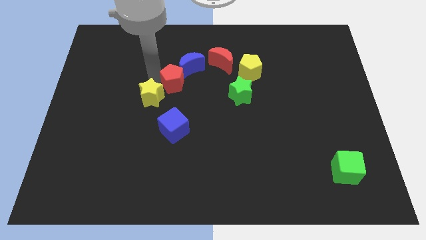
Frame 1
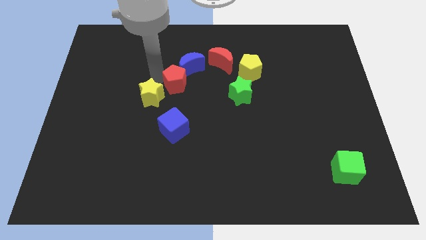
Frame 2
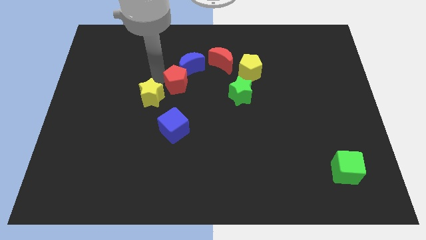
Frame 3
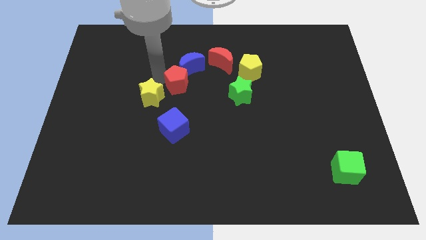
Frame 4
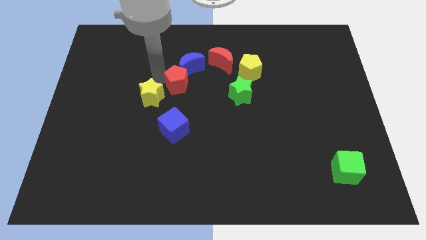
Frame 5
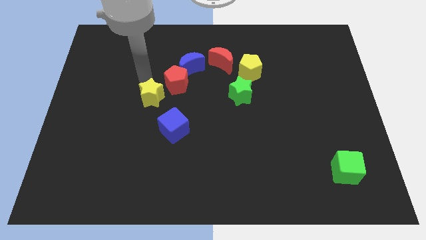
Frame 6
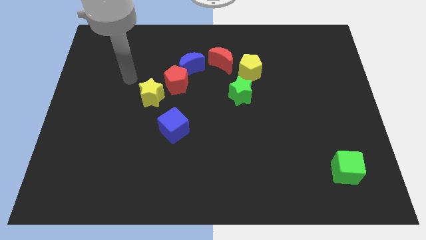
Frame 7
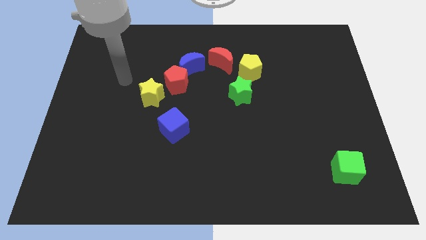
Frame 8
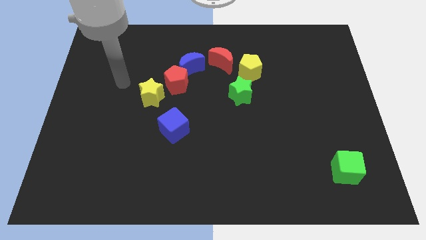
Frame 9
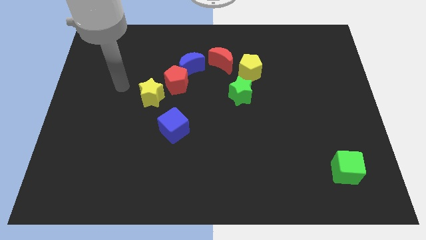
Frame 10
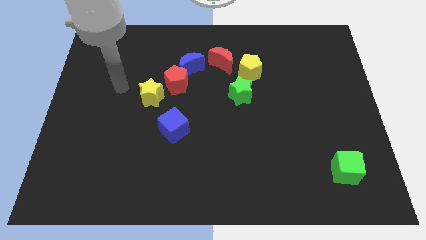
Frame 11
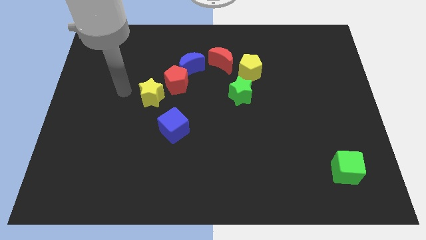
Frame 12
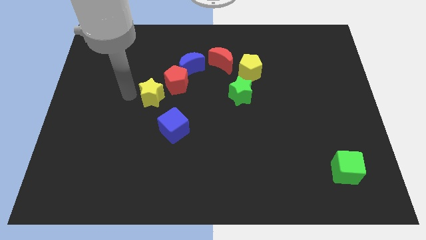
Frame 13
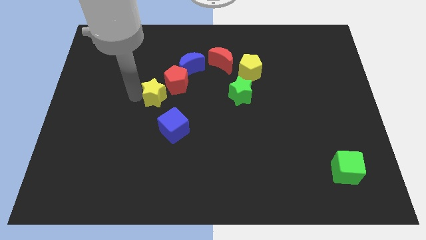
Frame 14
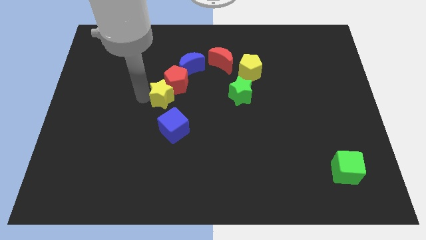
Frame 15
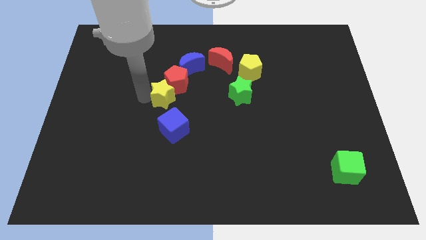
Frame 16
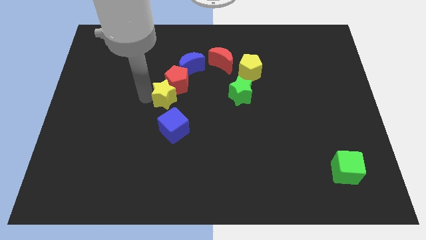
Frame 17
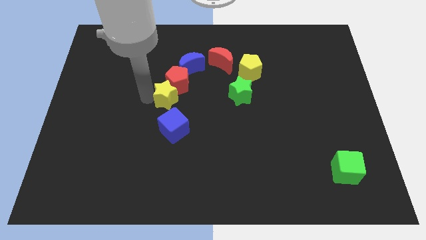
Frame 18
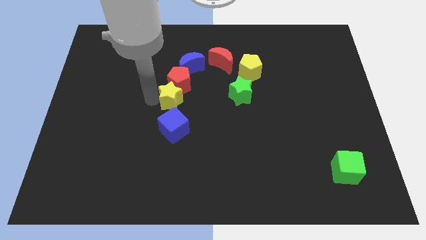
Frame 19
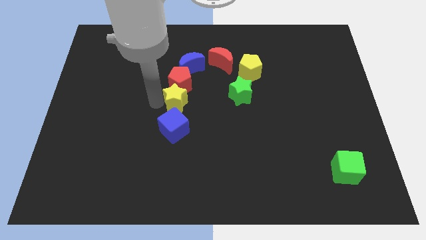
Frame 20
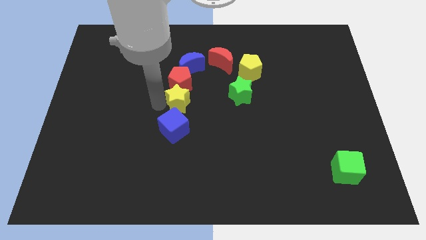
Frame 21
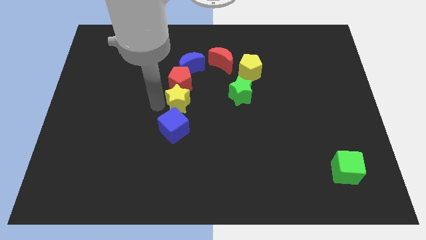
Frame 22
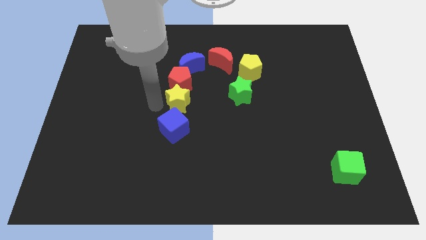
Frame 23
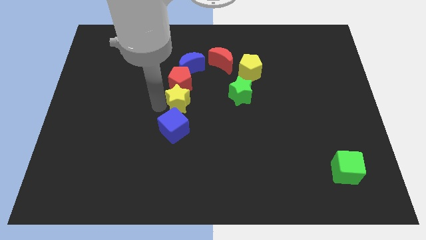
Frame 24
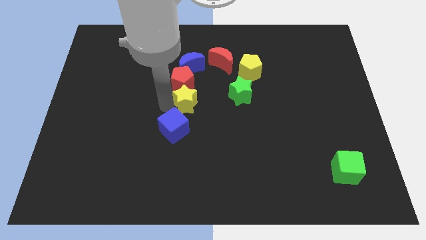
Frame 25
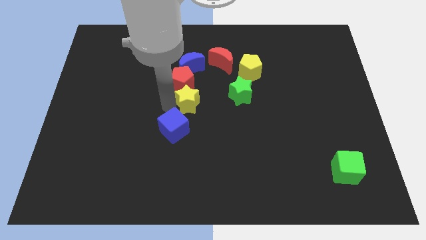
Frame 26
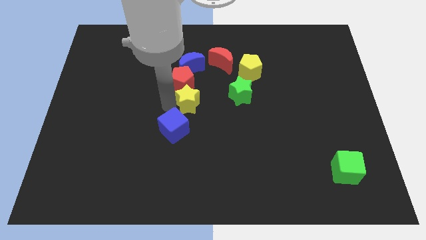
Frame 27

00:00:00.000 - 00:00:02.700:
move yellow star near blue cube

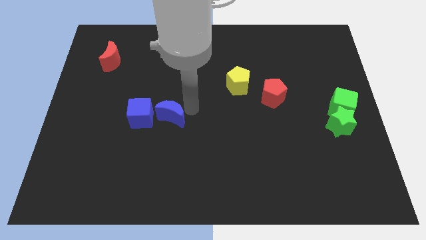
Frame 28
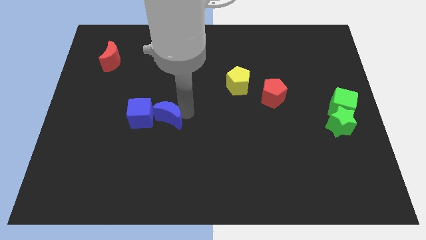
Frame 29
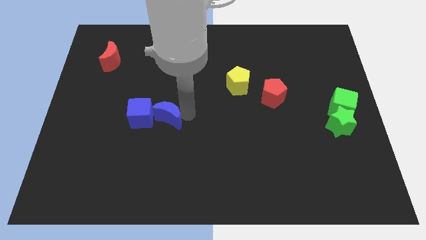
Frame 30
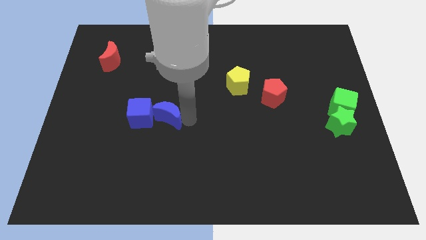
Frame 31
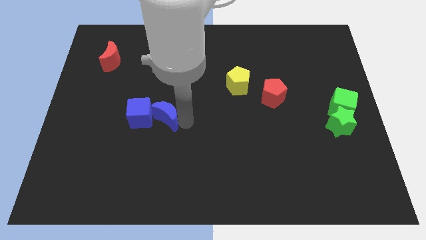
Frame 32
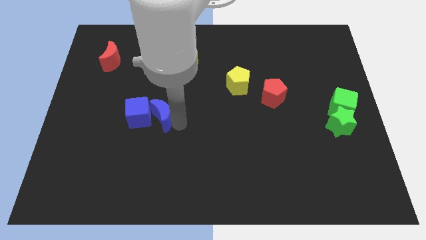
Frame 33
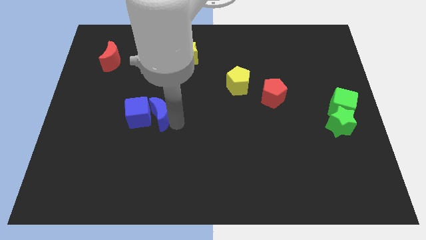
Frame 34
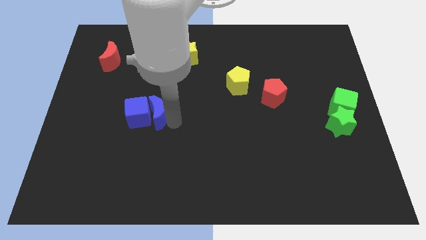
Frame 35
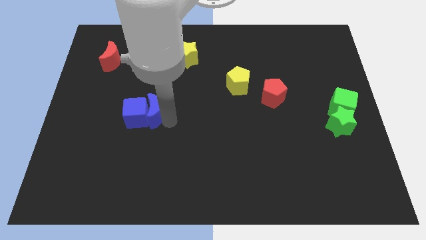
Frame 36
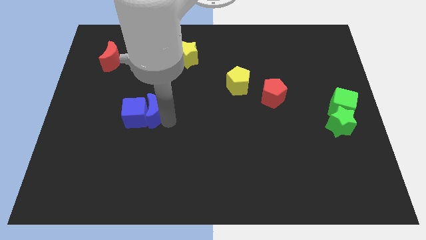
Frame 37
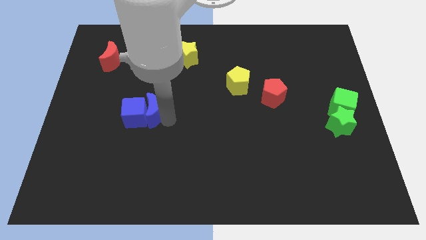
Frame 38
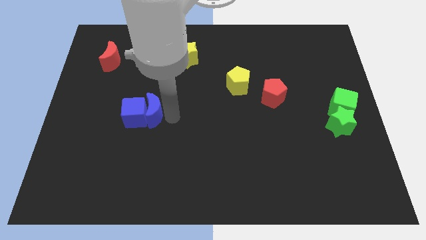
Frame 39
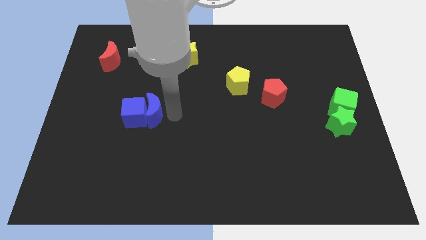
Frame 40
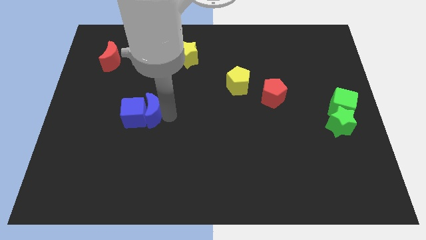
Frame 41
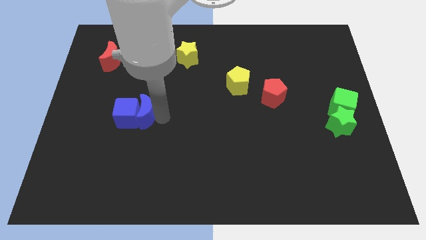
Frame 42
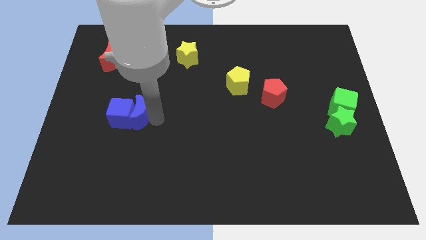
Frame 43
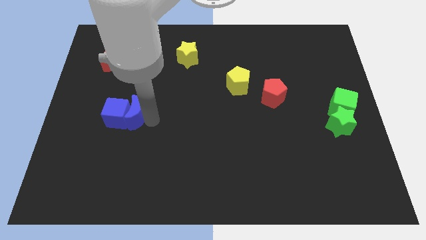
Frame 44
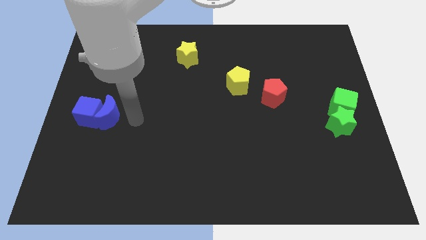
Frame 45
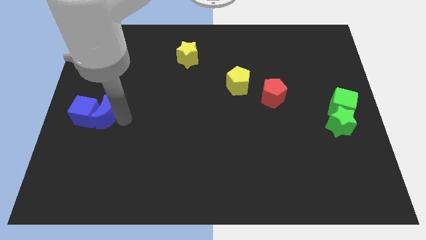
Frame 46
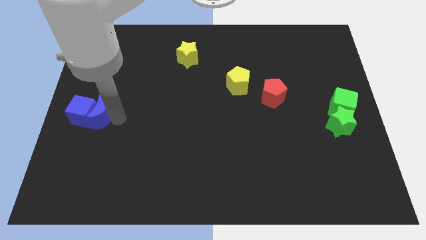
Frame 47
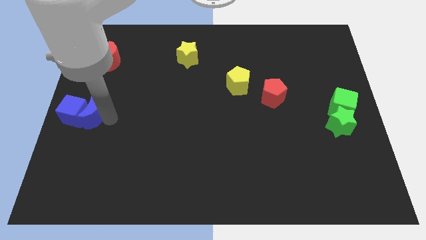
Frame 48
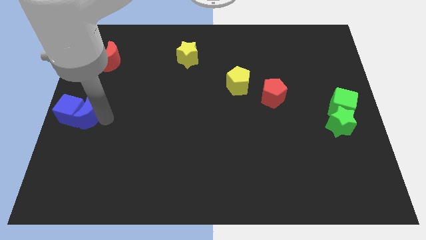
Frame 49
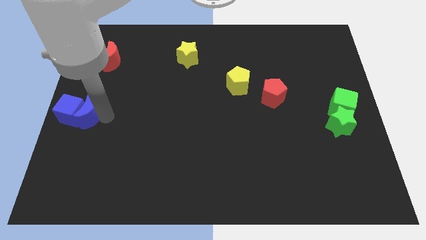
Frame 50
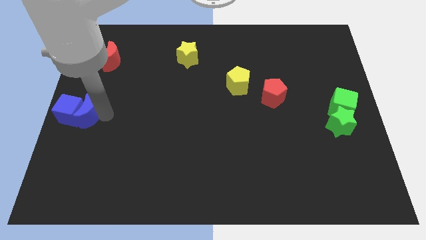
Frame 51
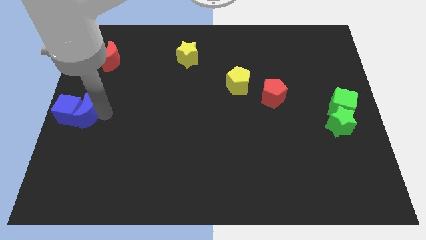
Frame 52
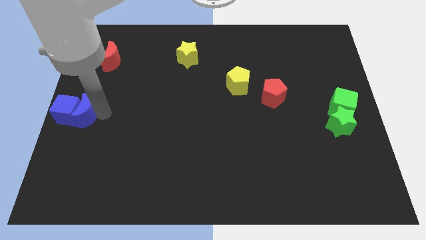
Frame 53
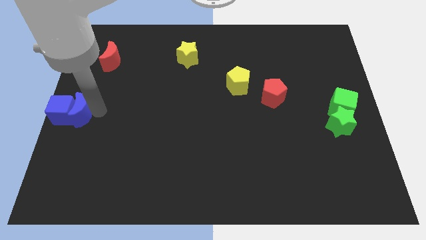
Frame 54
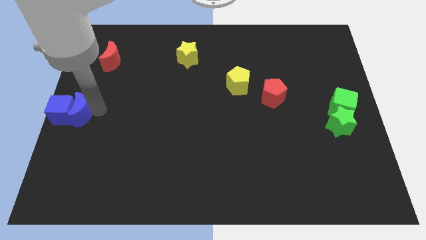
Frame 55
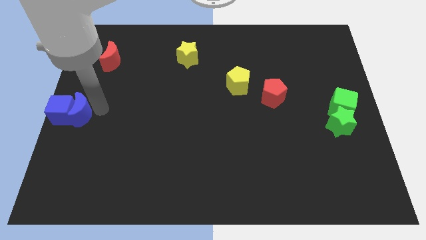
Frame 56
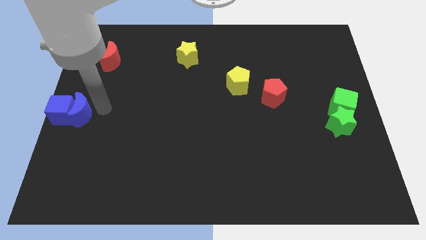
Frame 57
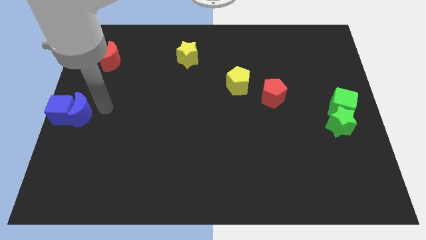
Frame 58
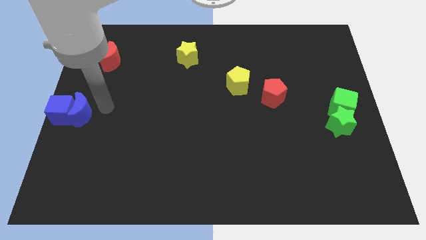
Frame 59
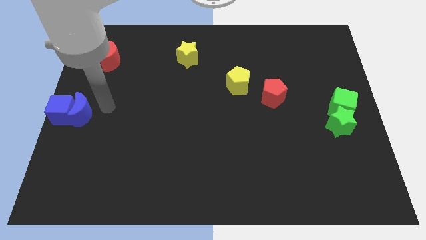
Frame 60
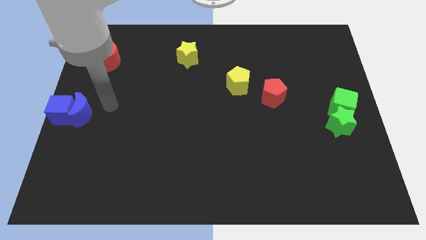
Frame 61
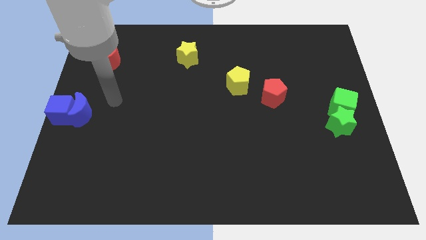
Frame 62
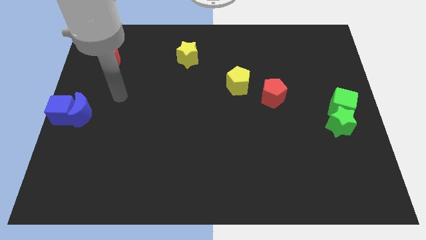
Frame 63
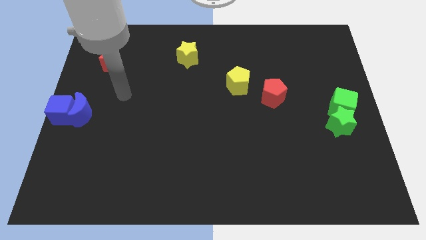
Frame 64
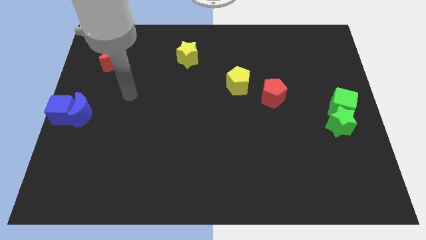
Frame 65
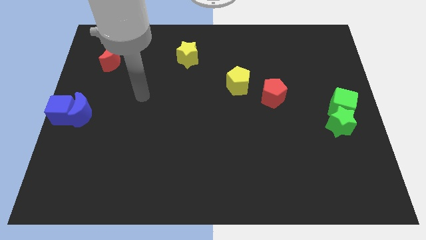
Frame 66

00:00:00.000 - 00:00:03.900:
move the blue cube with blue crescent towards the center left of the board

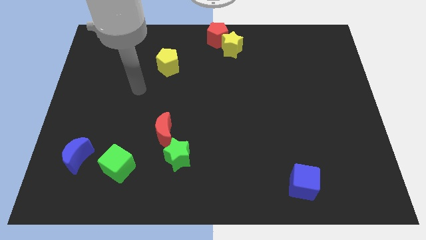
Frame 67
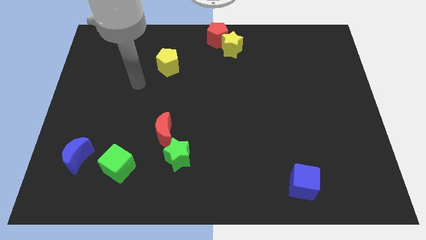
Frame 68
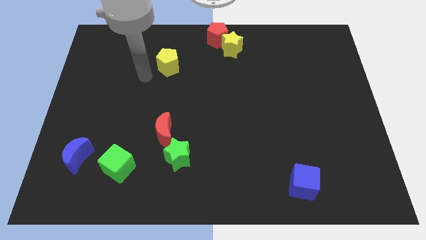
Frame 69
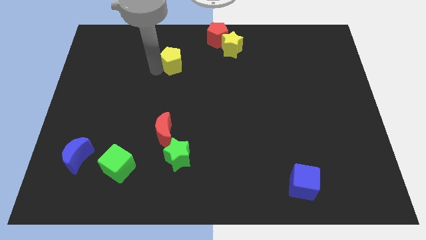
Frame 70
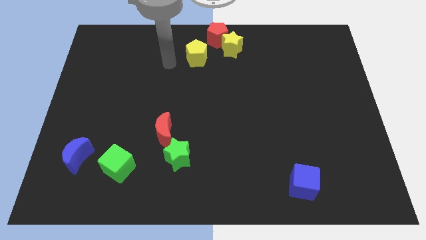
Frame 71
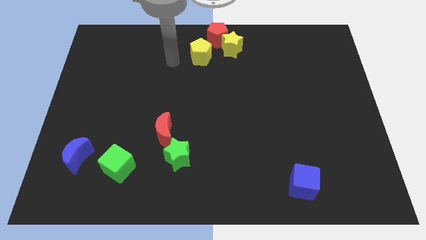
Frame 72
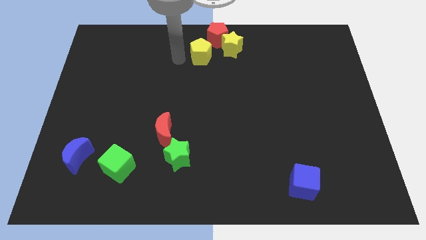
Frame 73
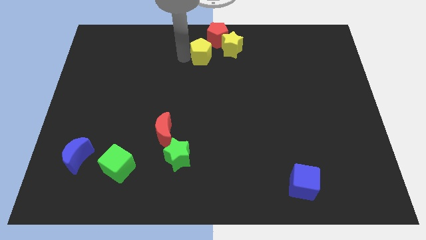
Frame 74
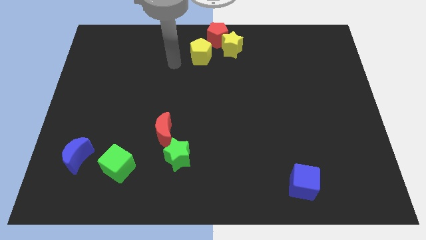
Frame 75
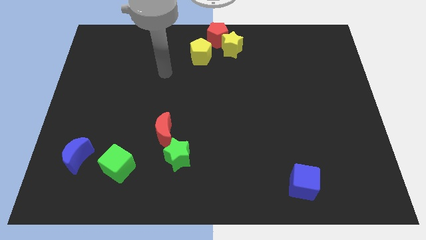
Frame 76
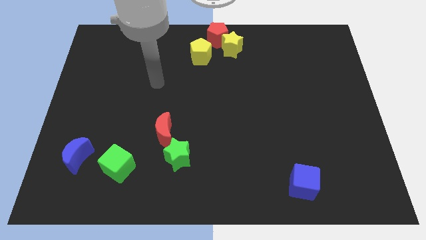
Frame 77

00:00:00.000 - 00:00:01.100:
slide yellow pentagon towards yellow star

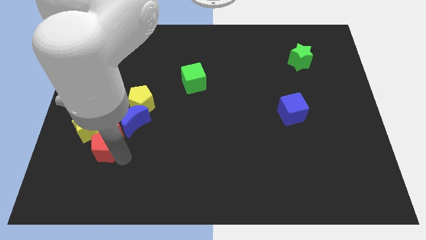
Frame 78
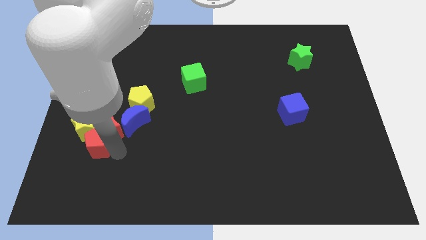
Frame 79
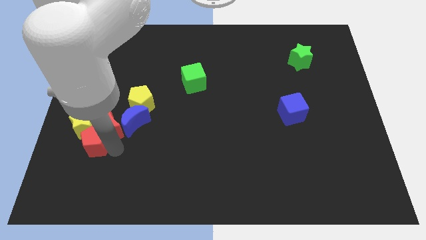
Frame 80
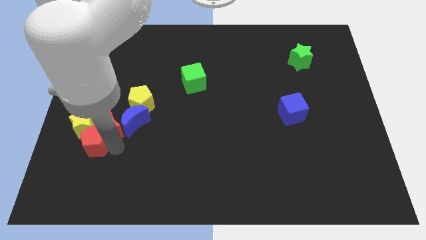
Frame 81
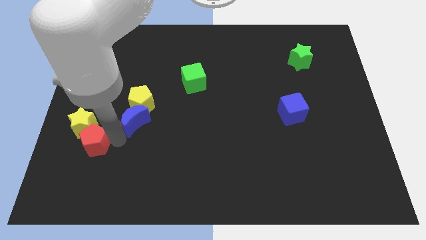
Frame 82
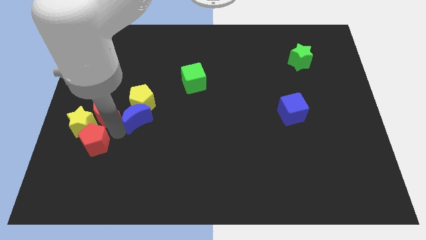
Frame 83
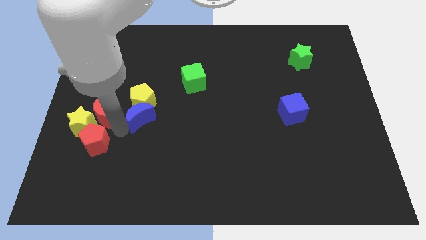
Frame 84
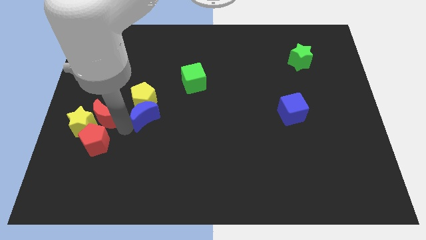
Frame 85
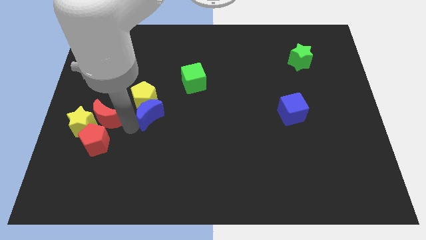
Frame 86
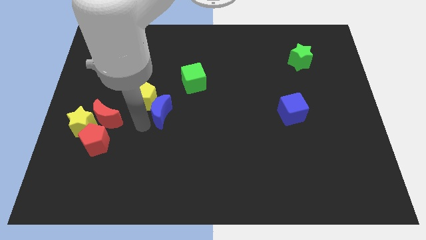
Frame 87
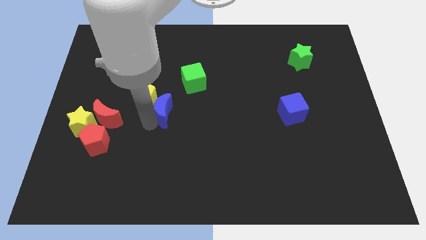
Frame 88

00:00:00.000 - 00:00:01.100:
separate the blue moon from the red moon

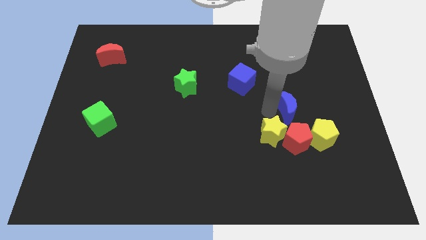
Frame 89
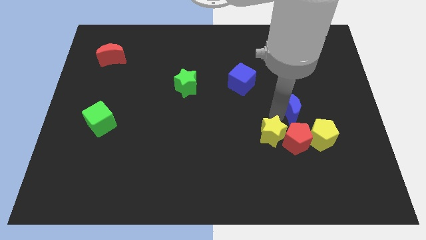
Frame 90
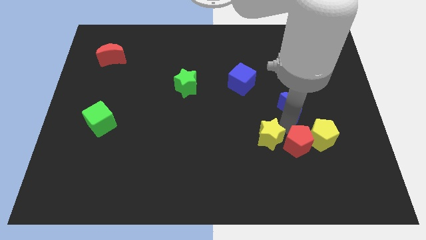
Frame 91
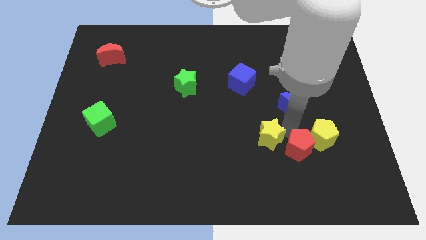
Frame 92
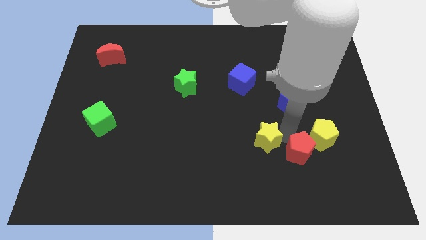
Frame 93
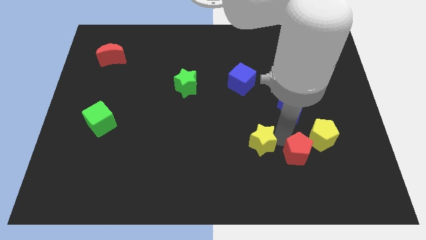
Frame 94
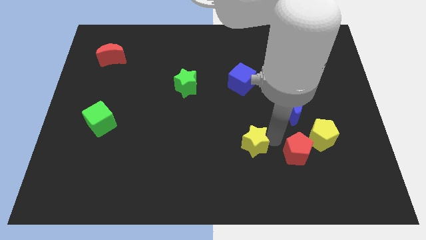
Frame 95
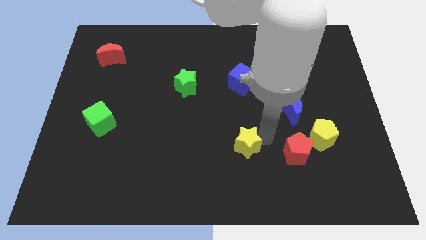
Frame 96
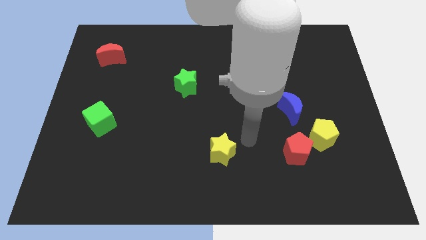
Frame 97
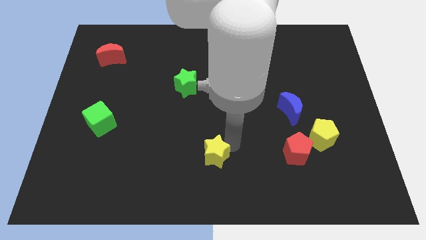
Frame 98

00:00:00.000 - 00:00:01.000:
seperate yellow star and red pentagon
